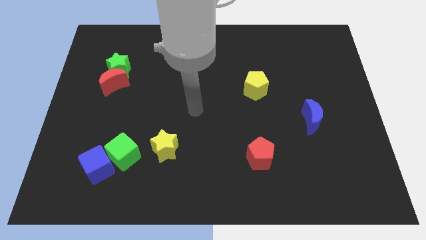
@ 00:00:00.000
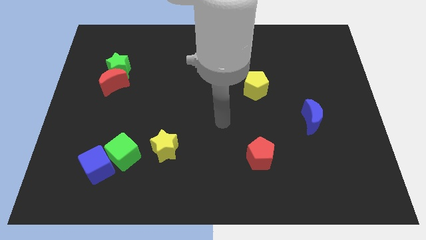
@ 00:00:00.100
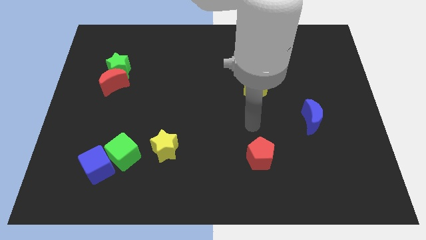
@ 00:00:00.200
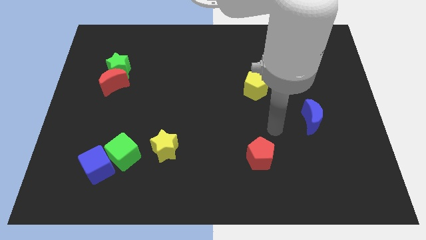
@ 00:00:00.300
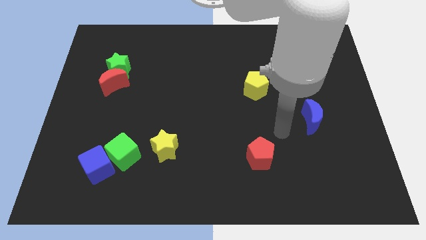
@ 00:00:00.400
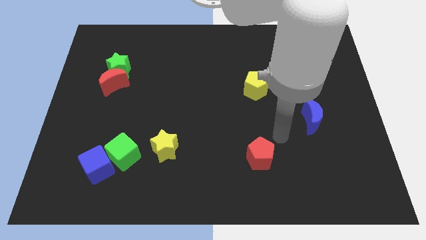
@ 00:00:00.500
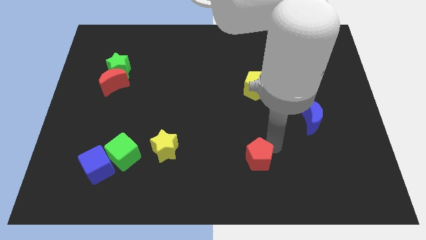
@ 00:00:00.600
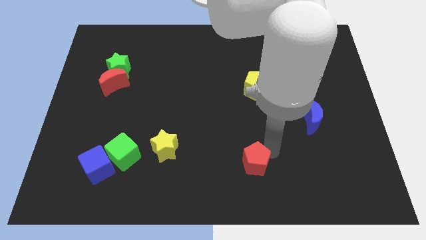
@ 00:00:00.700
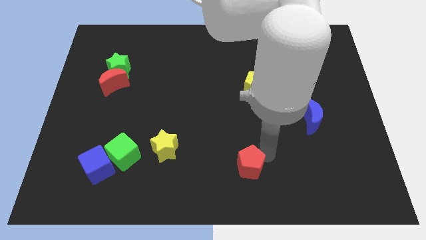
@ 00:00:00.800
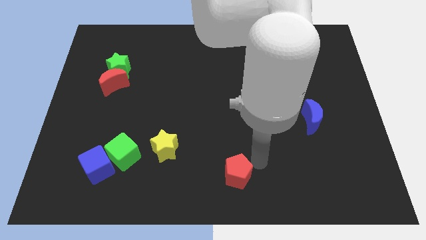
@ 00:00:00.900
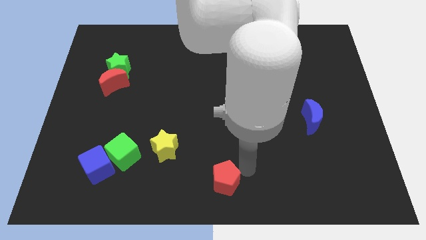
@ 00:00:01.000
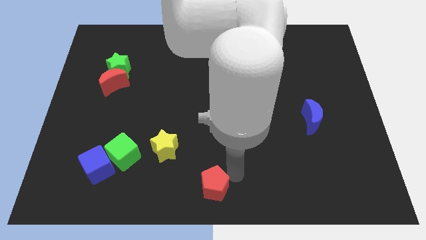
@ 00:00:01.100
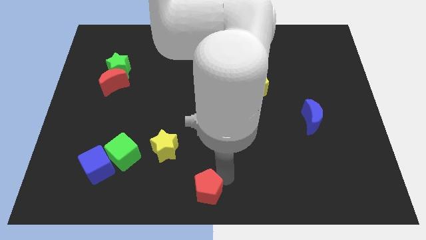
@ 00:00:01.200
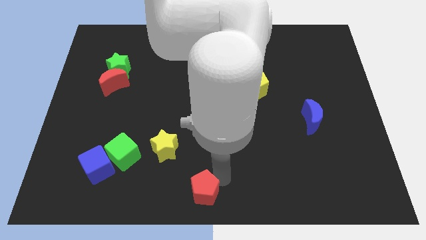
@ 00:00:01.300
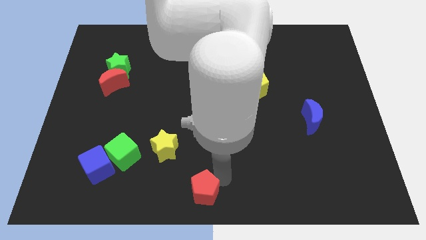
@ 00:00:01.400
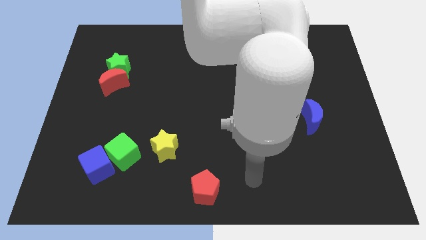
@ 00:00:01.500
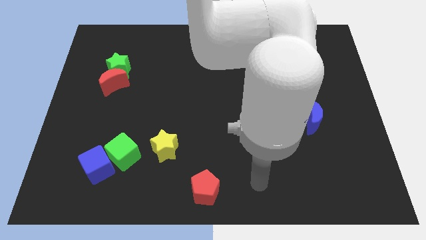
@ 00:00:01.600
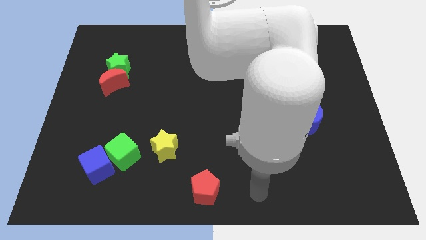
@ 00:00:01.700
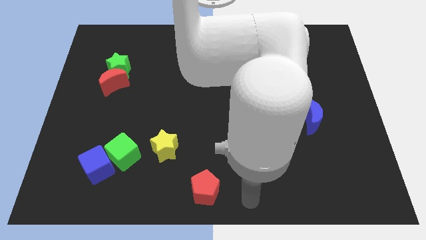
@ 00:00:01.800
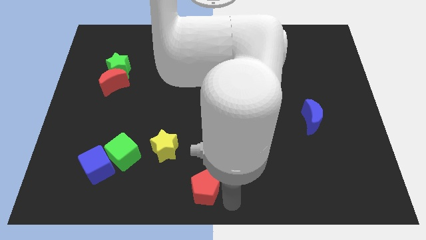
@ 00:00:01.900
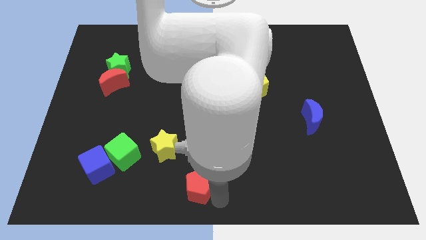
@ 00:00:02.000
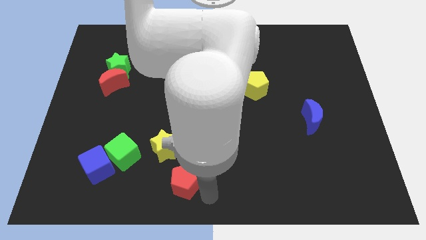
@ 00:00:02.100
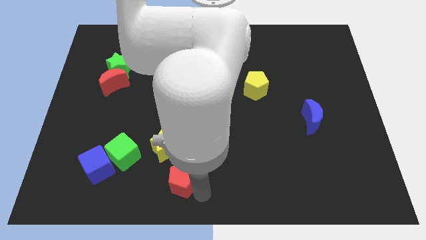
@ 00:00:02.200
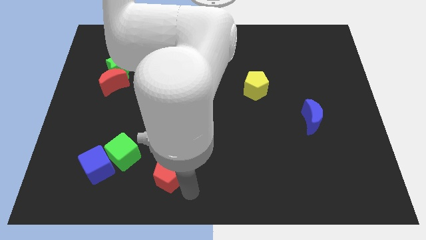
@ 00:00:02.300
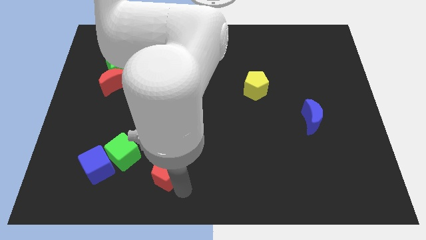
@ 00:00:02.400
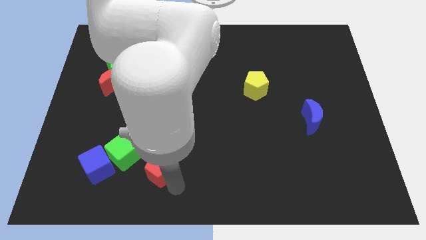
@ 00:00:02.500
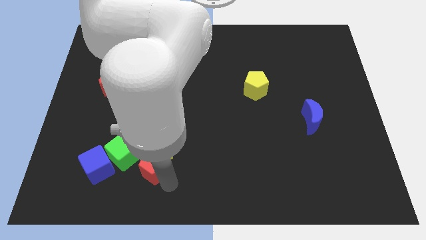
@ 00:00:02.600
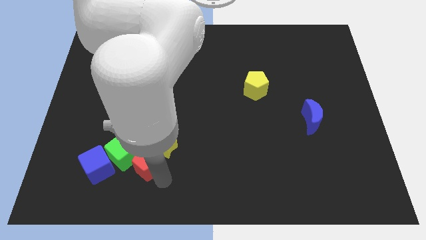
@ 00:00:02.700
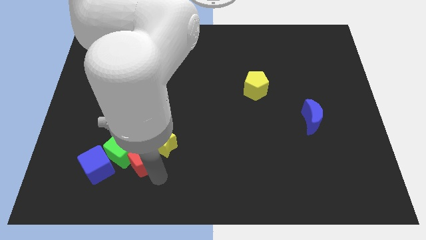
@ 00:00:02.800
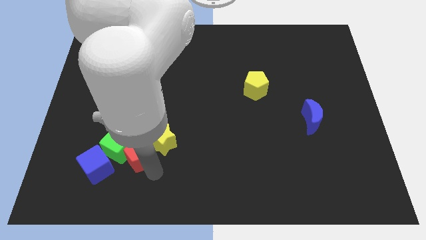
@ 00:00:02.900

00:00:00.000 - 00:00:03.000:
slide the red pentagon close to the green cube

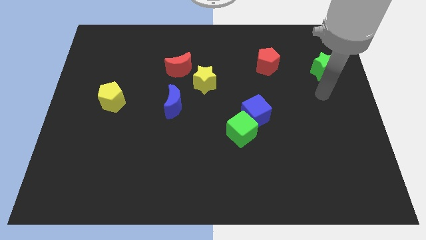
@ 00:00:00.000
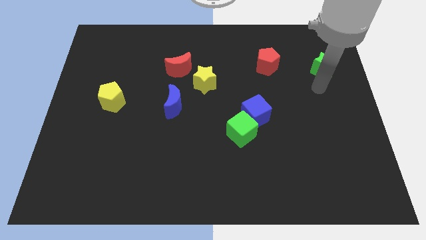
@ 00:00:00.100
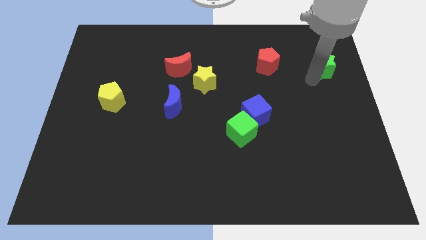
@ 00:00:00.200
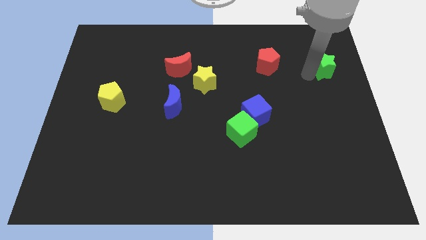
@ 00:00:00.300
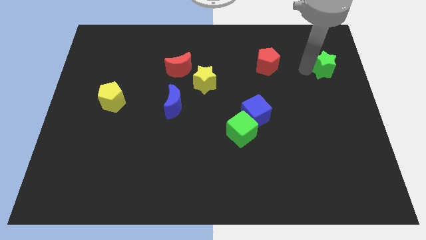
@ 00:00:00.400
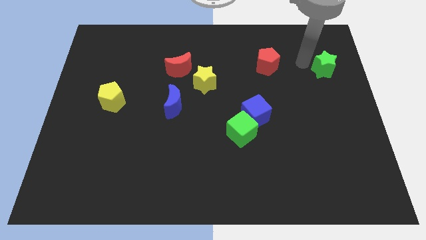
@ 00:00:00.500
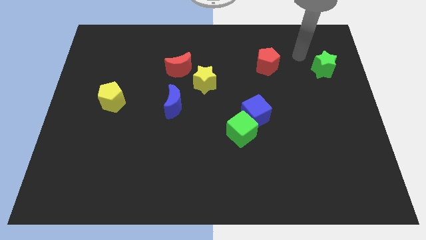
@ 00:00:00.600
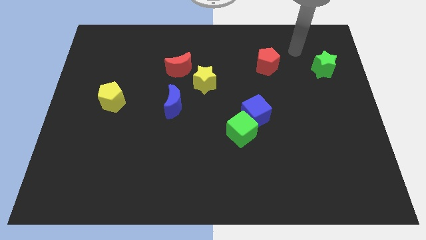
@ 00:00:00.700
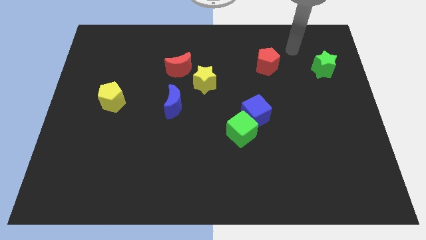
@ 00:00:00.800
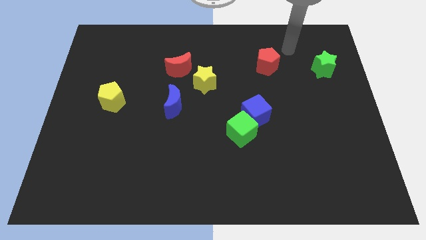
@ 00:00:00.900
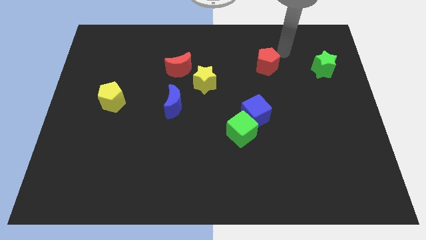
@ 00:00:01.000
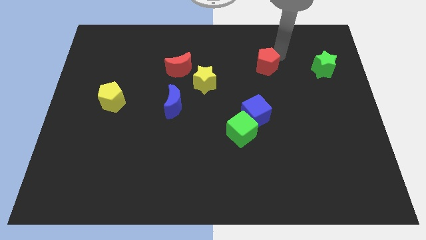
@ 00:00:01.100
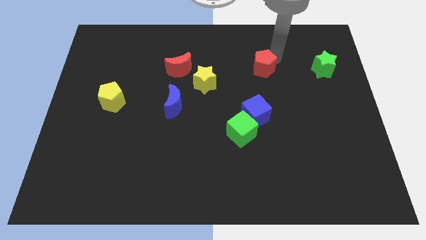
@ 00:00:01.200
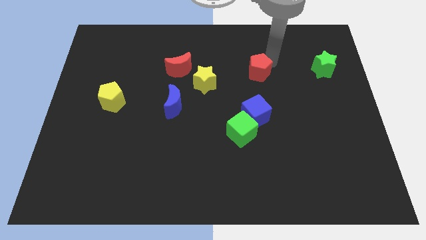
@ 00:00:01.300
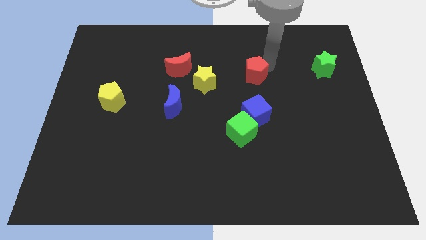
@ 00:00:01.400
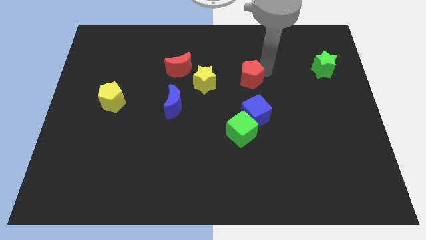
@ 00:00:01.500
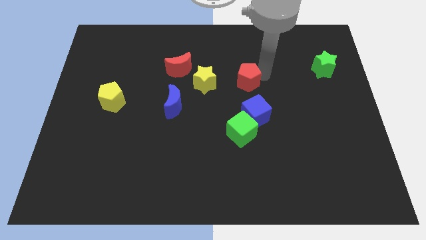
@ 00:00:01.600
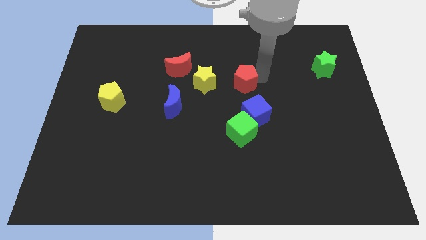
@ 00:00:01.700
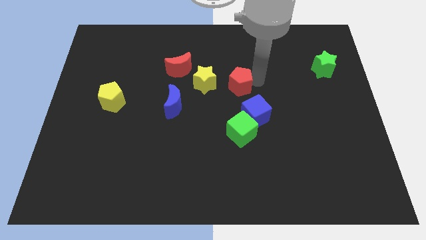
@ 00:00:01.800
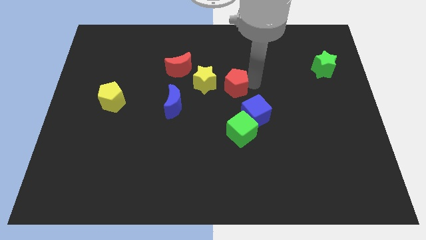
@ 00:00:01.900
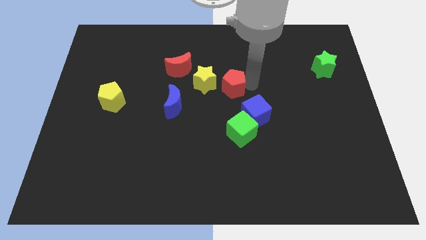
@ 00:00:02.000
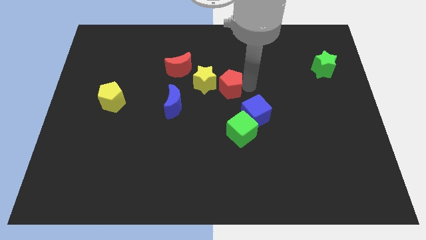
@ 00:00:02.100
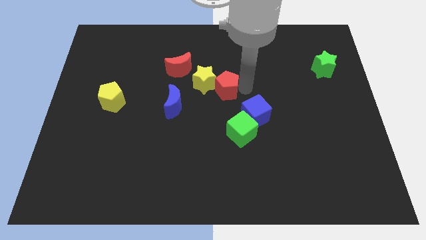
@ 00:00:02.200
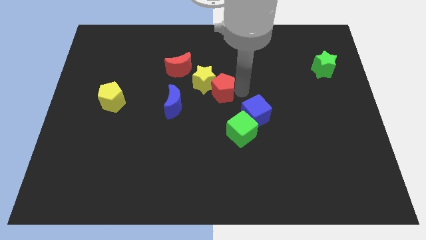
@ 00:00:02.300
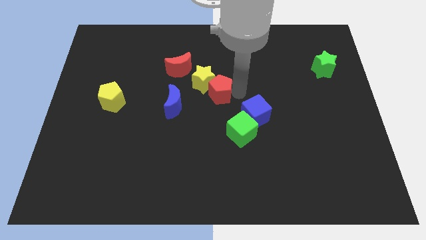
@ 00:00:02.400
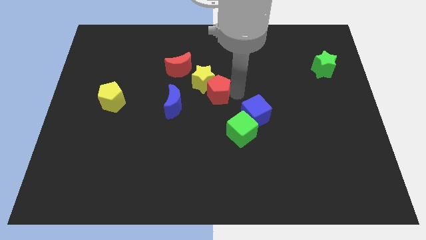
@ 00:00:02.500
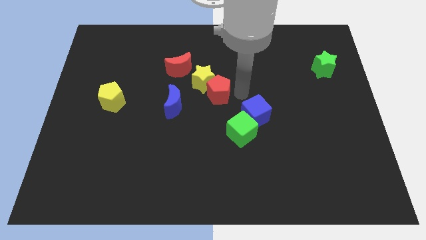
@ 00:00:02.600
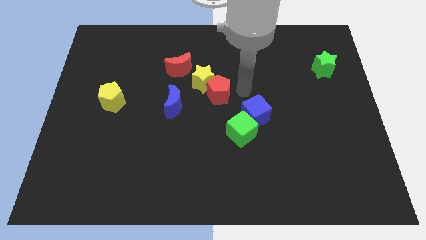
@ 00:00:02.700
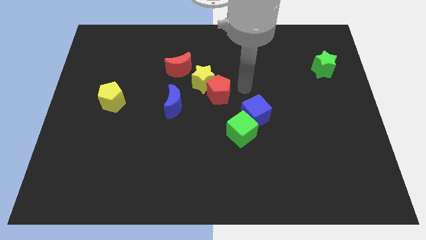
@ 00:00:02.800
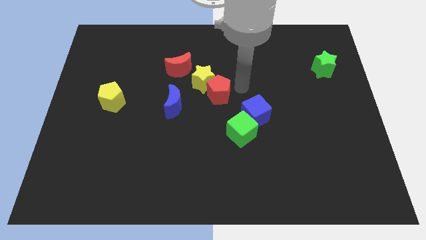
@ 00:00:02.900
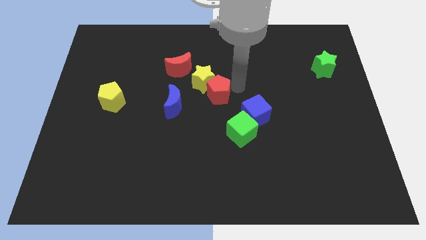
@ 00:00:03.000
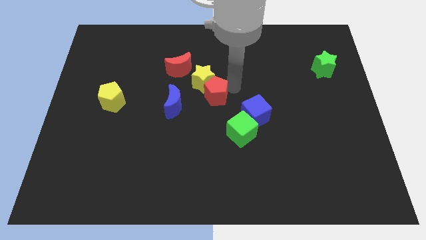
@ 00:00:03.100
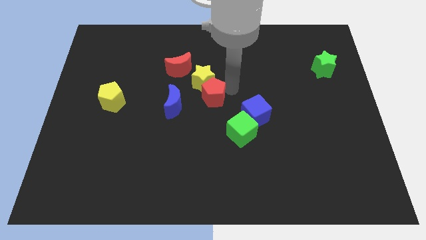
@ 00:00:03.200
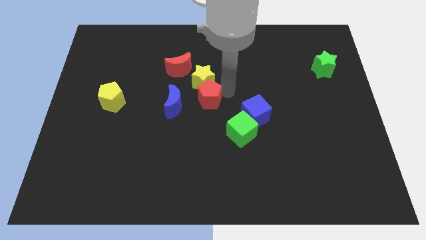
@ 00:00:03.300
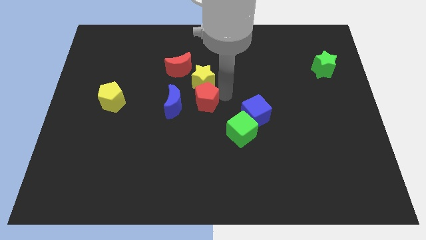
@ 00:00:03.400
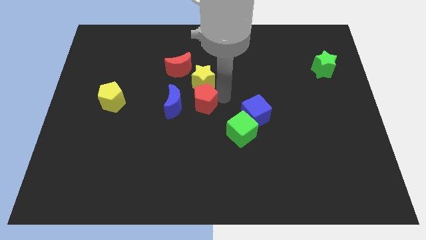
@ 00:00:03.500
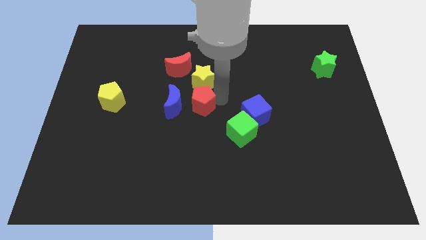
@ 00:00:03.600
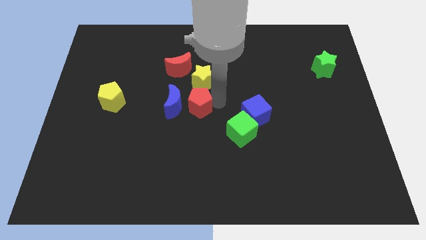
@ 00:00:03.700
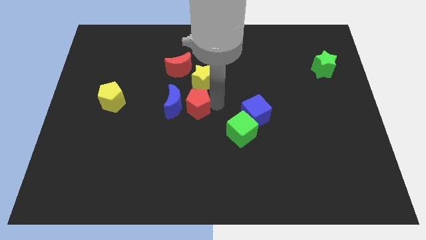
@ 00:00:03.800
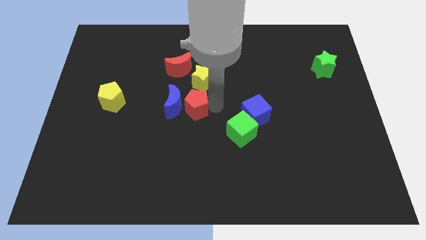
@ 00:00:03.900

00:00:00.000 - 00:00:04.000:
move the red pentagon towards the blue moon

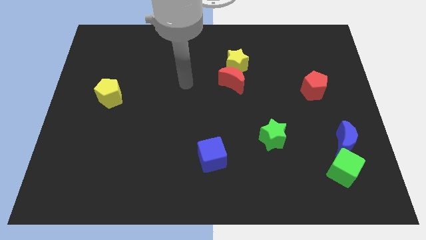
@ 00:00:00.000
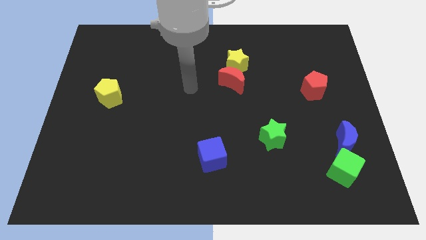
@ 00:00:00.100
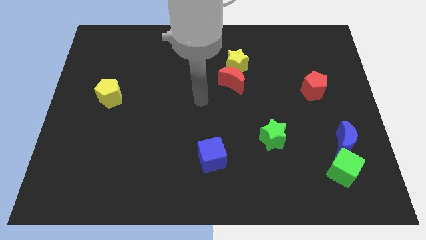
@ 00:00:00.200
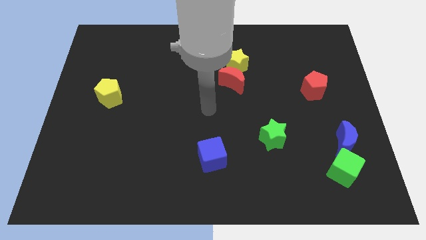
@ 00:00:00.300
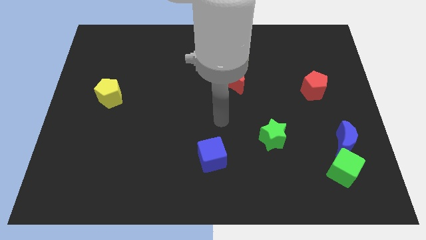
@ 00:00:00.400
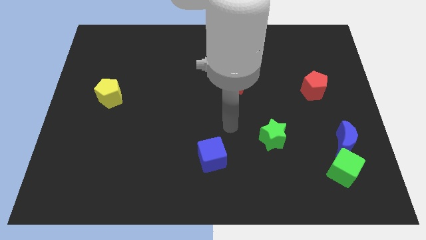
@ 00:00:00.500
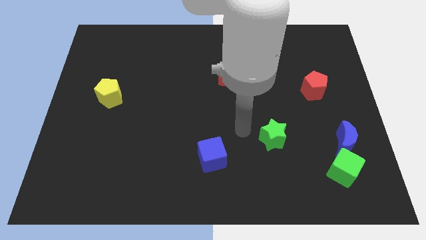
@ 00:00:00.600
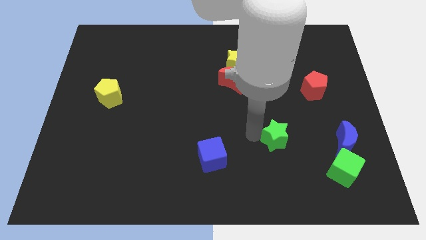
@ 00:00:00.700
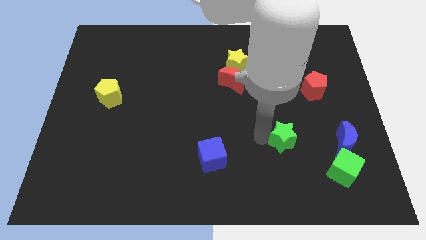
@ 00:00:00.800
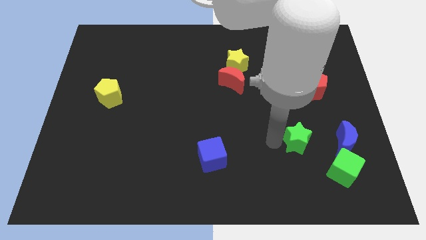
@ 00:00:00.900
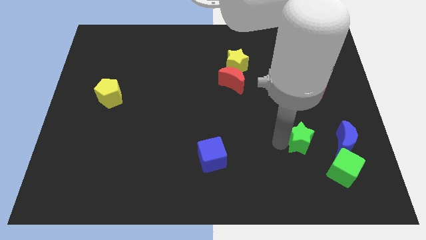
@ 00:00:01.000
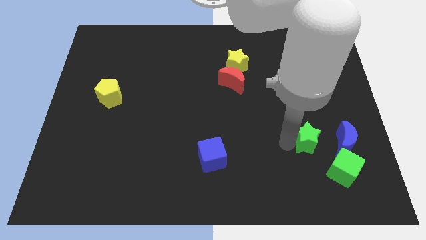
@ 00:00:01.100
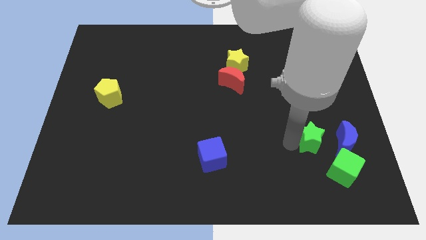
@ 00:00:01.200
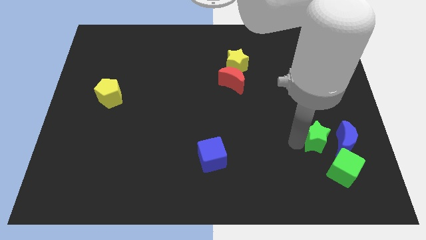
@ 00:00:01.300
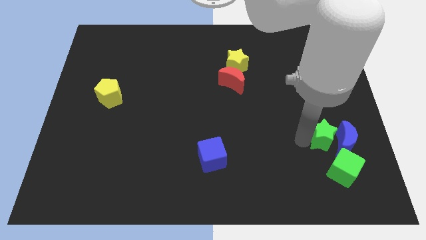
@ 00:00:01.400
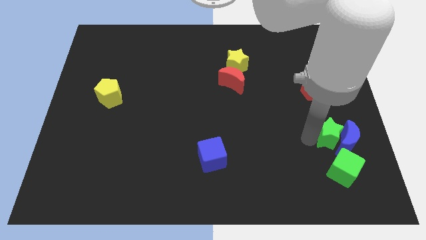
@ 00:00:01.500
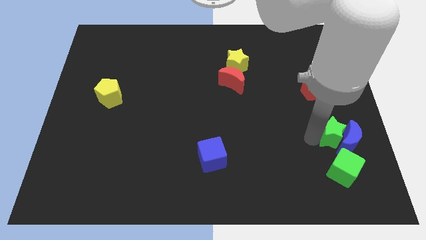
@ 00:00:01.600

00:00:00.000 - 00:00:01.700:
move the green star towards the blue moon
